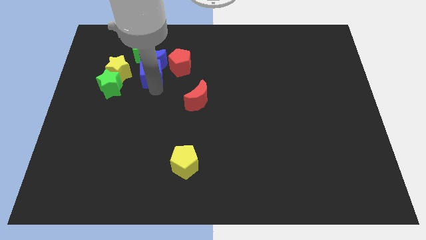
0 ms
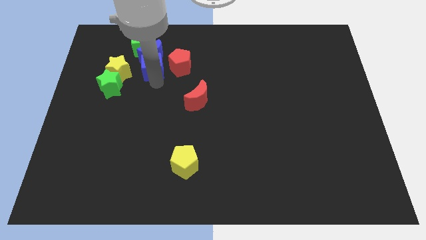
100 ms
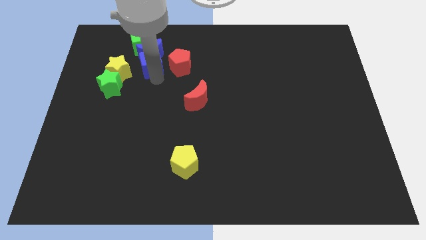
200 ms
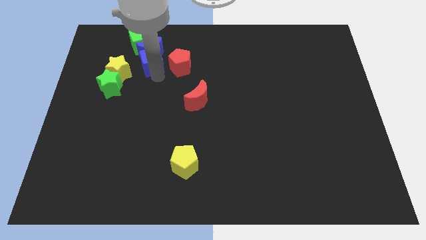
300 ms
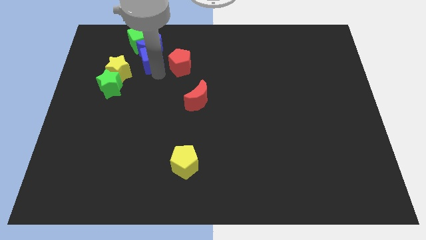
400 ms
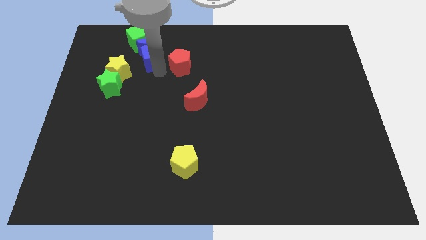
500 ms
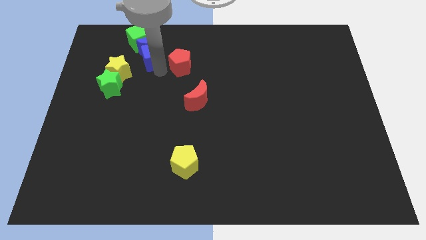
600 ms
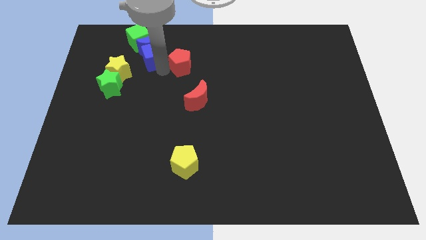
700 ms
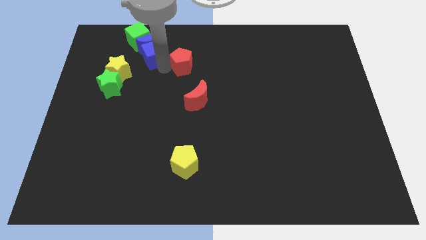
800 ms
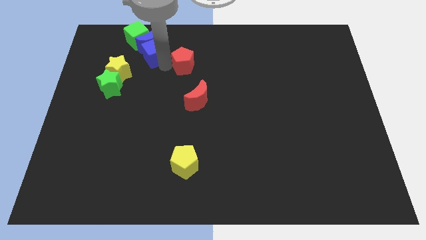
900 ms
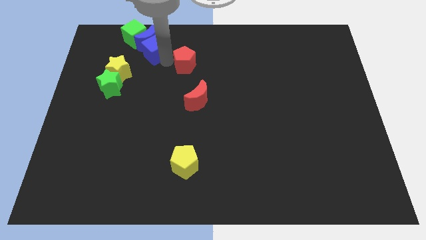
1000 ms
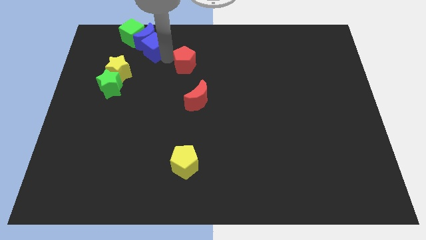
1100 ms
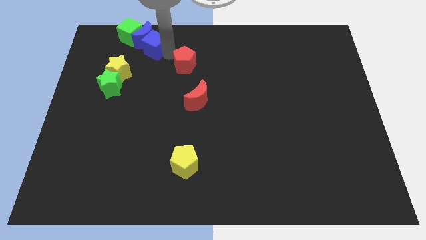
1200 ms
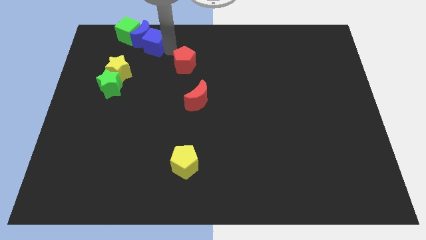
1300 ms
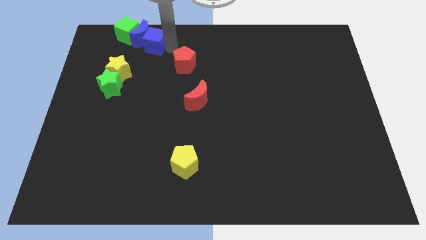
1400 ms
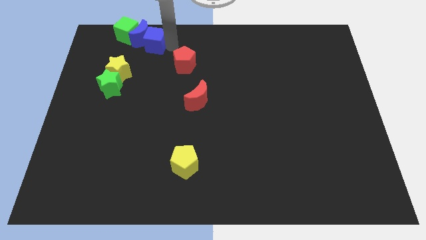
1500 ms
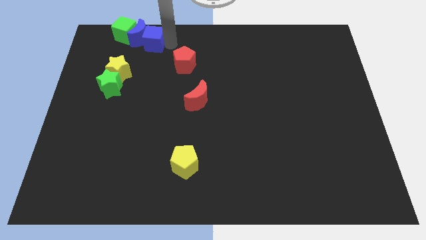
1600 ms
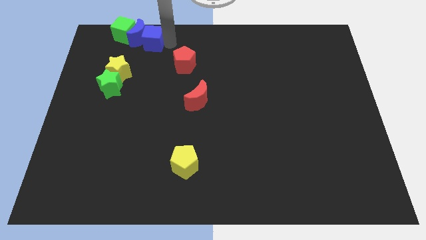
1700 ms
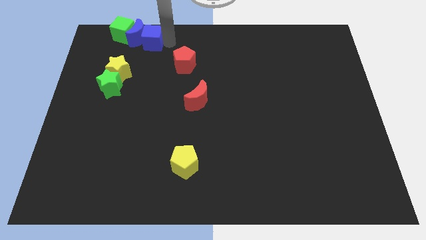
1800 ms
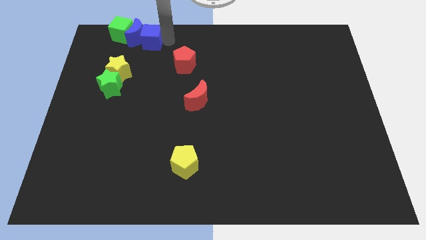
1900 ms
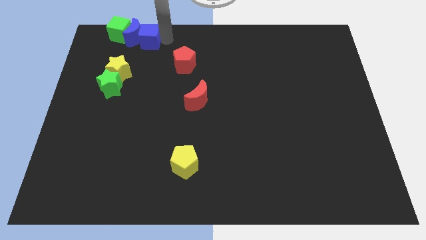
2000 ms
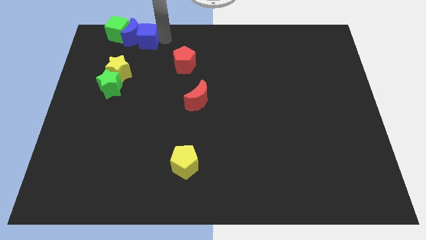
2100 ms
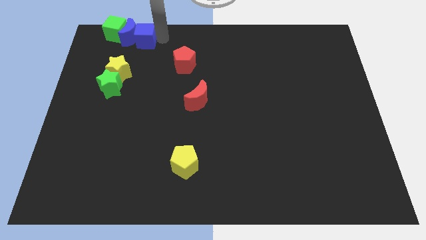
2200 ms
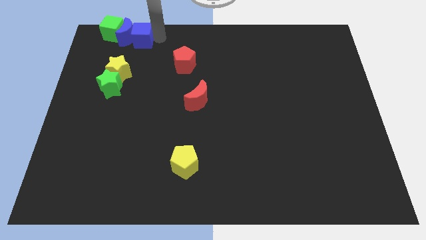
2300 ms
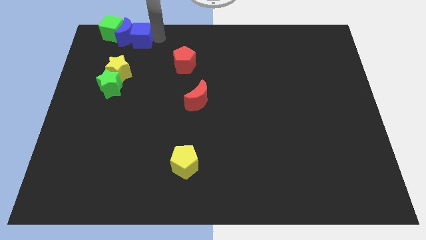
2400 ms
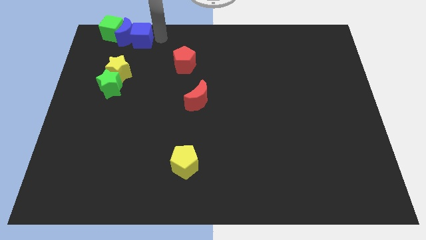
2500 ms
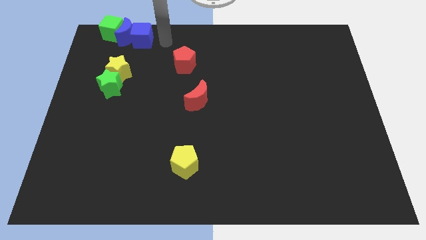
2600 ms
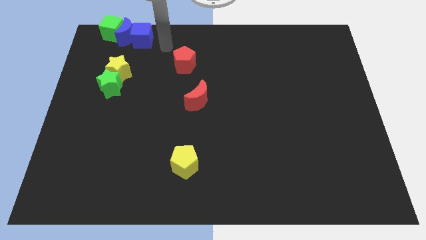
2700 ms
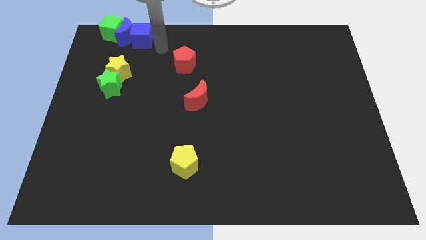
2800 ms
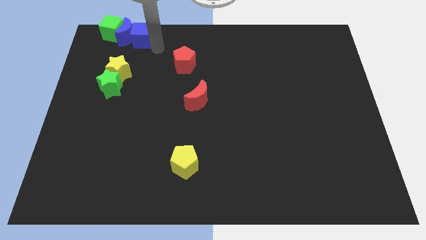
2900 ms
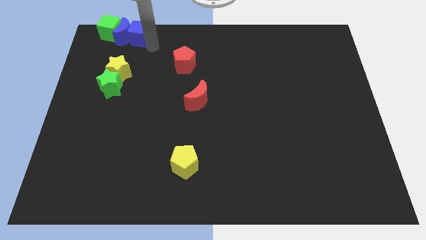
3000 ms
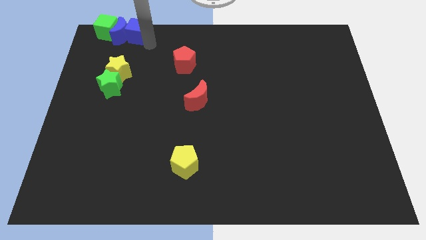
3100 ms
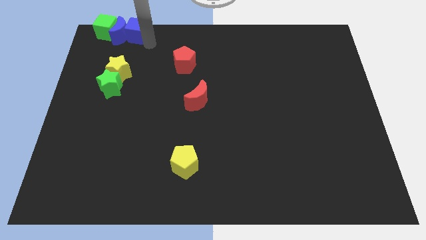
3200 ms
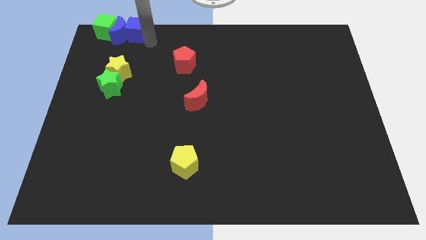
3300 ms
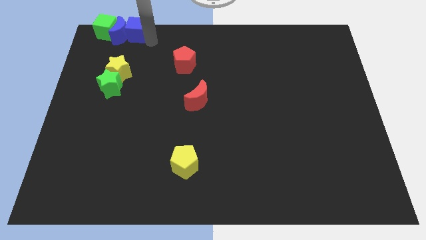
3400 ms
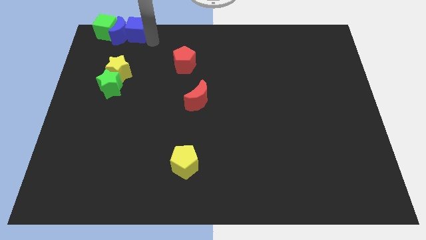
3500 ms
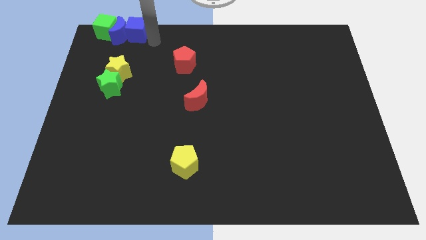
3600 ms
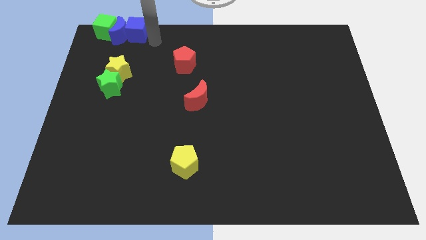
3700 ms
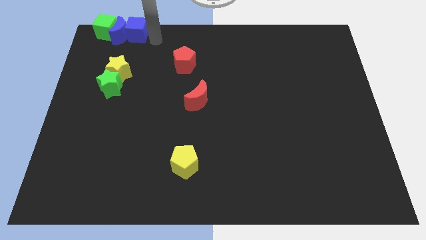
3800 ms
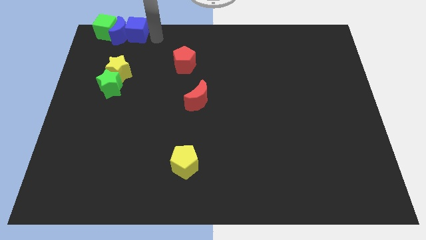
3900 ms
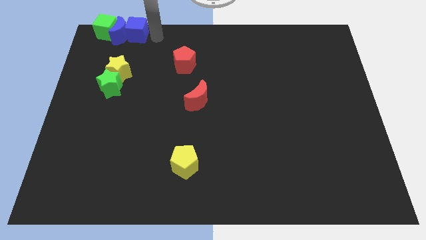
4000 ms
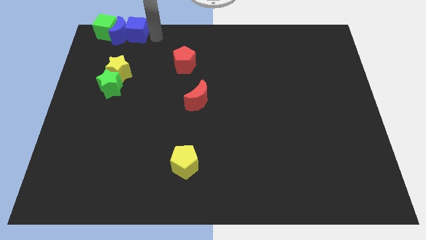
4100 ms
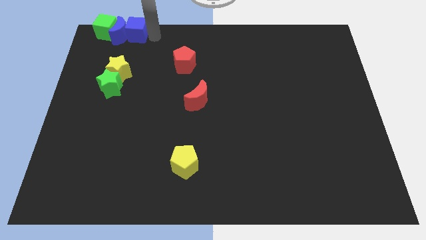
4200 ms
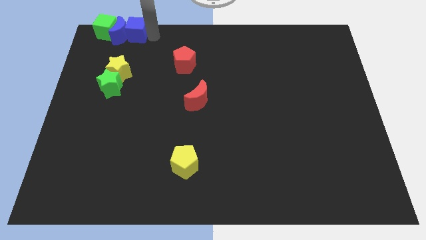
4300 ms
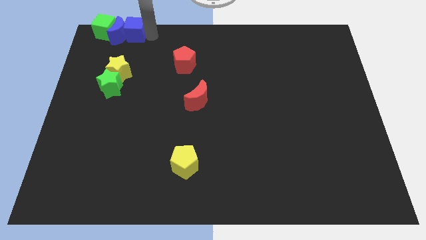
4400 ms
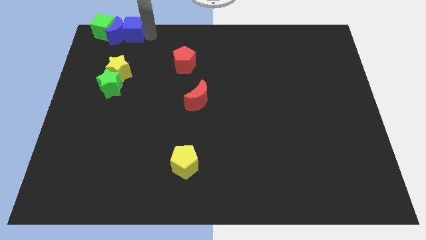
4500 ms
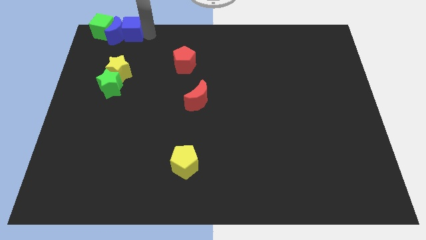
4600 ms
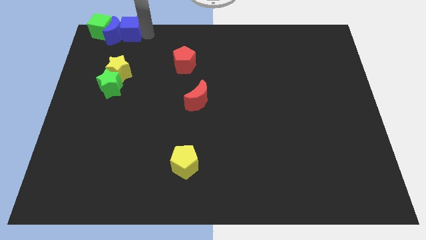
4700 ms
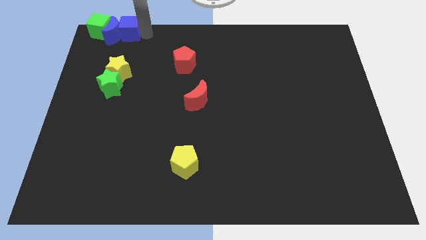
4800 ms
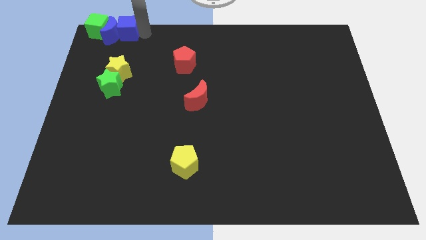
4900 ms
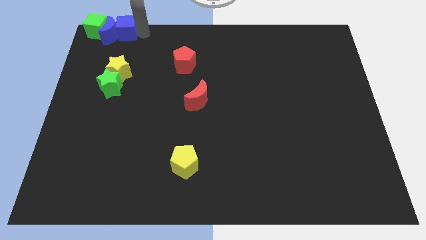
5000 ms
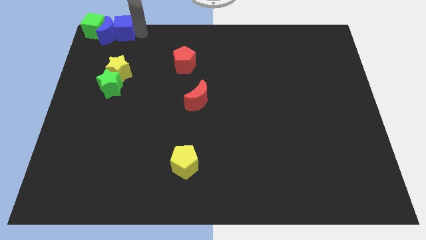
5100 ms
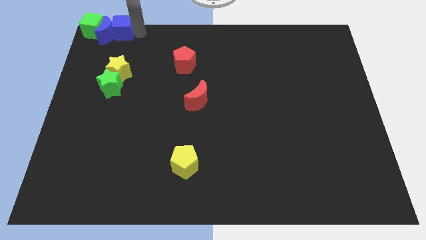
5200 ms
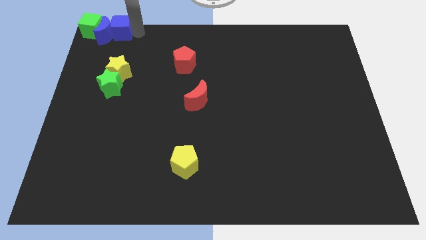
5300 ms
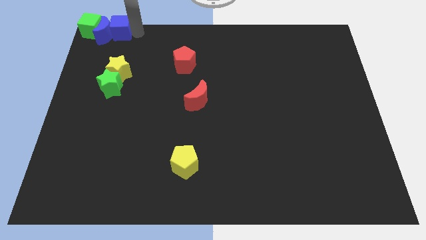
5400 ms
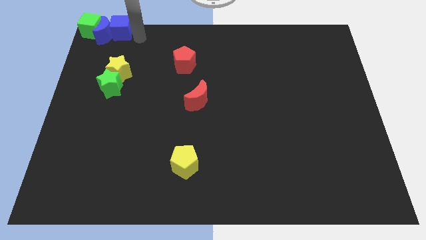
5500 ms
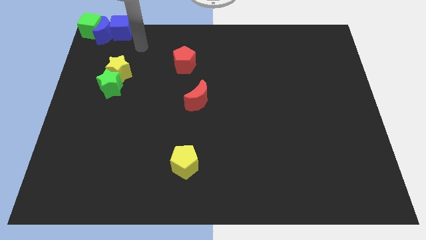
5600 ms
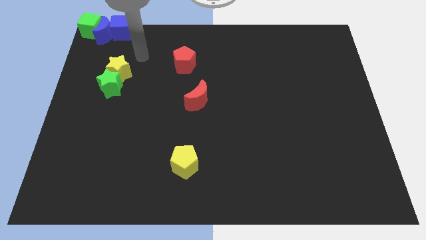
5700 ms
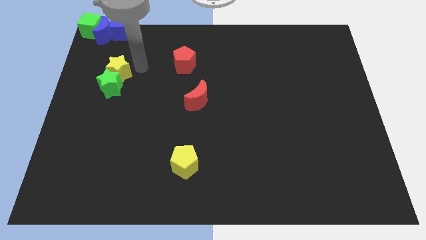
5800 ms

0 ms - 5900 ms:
move both the blue blocks along with the green cube to the top left corner of the board

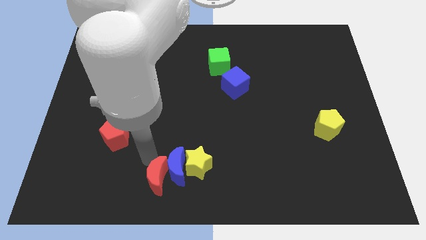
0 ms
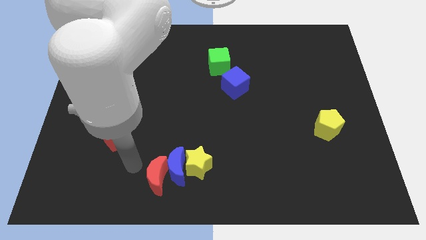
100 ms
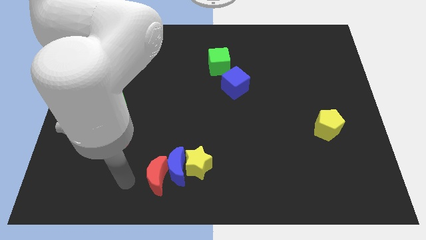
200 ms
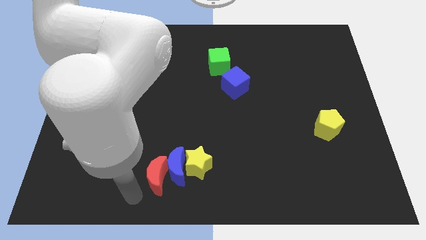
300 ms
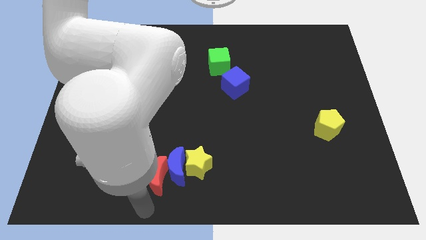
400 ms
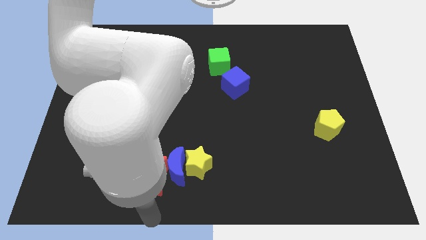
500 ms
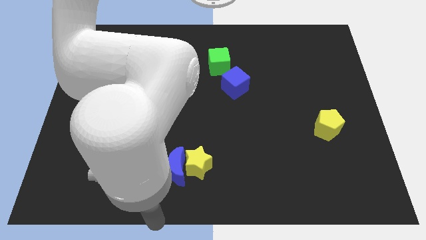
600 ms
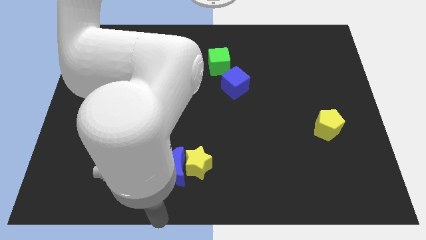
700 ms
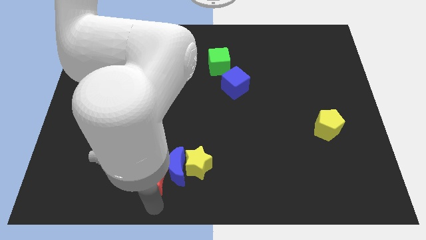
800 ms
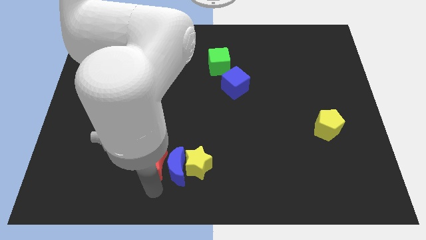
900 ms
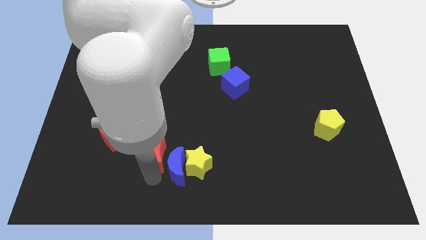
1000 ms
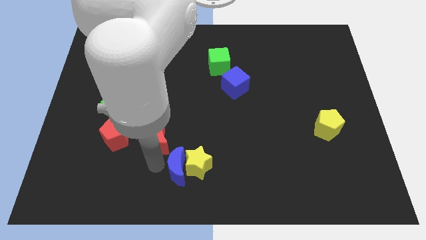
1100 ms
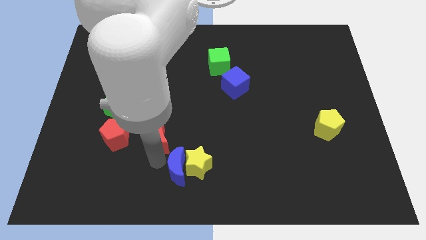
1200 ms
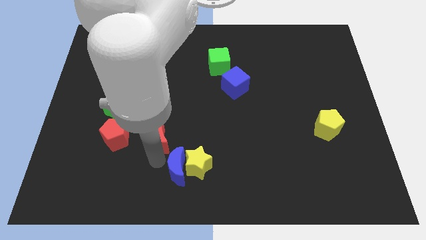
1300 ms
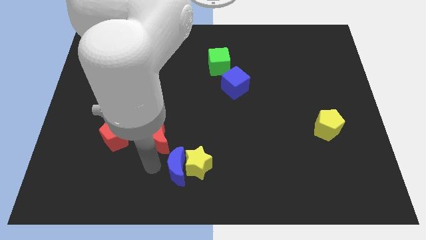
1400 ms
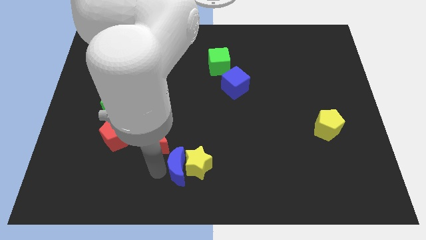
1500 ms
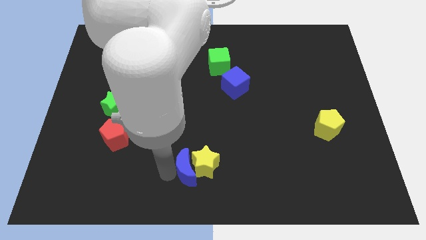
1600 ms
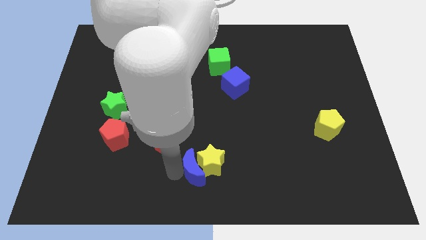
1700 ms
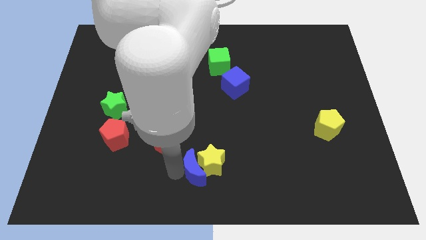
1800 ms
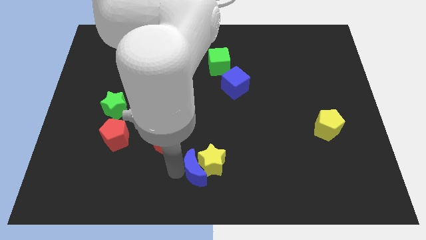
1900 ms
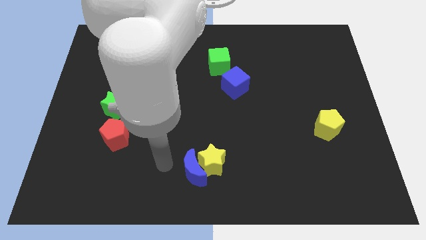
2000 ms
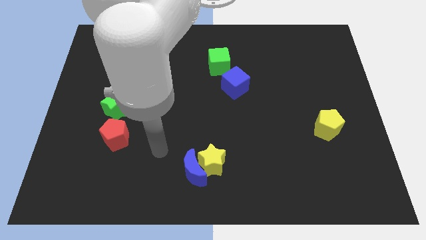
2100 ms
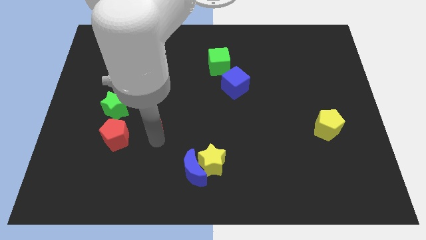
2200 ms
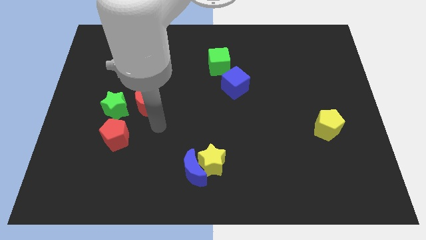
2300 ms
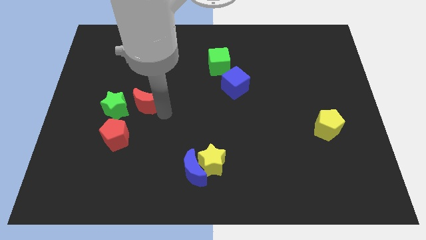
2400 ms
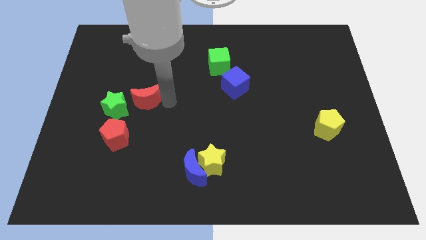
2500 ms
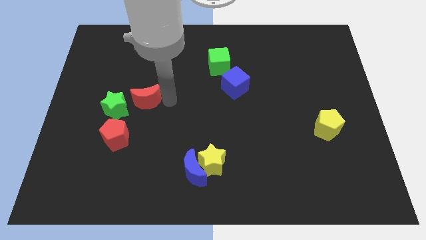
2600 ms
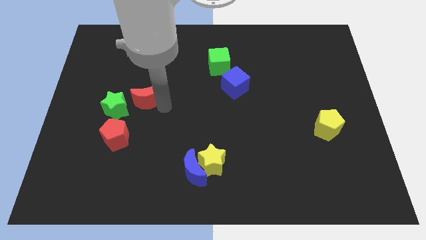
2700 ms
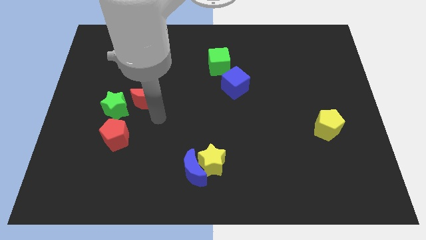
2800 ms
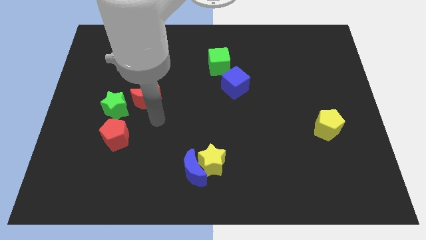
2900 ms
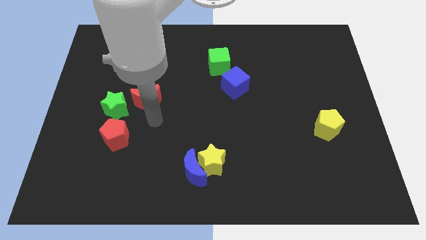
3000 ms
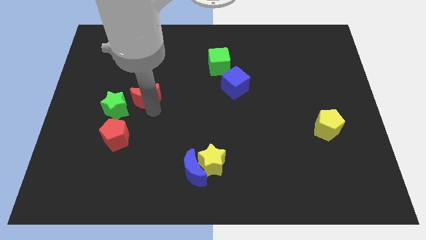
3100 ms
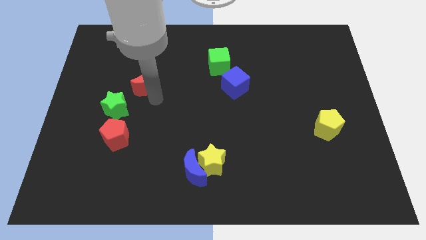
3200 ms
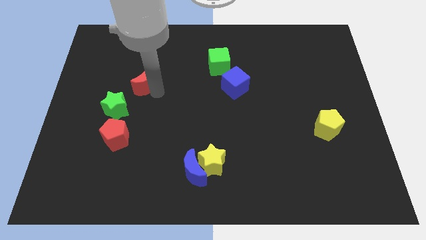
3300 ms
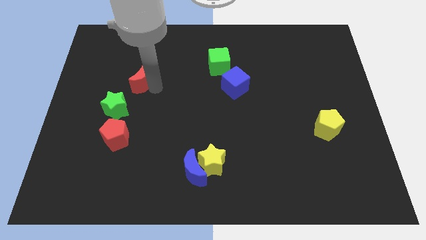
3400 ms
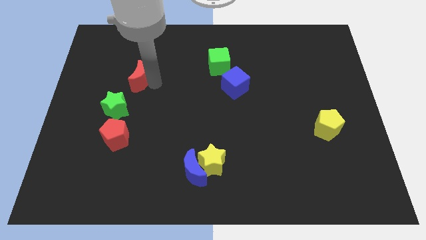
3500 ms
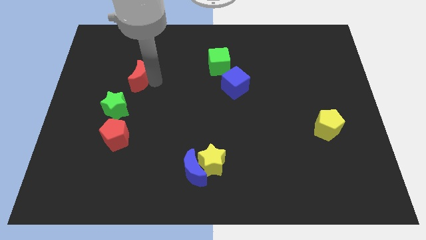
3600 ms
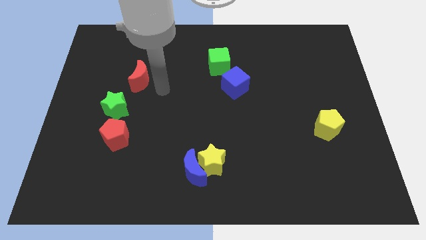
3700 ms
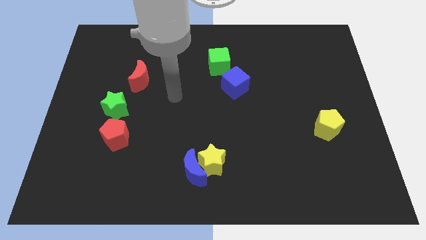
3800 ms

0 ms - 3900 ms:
move red crescent towards top of green star
